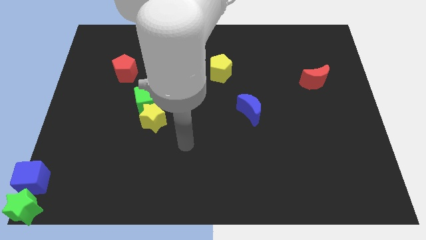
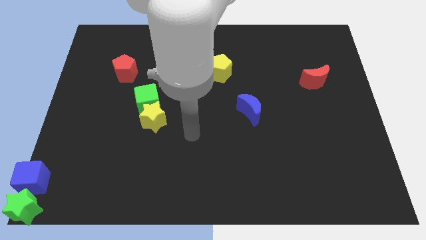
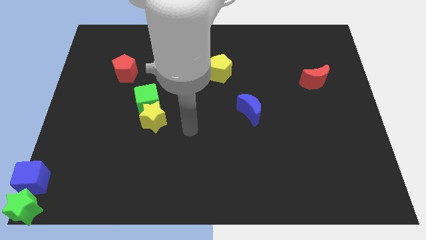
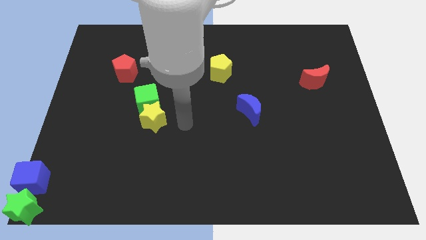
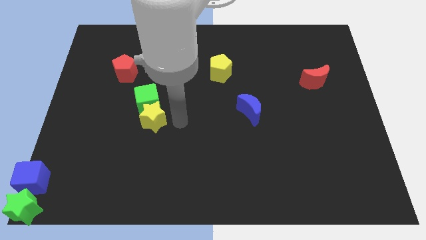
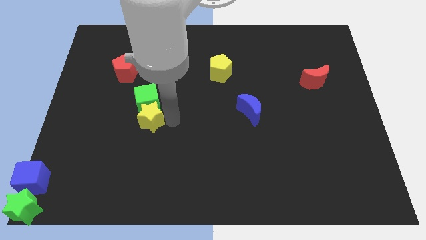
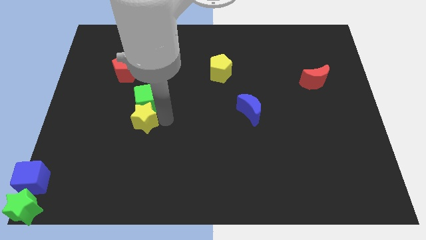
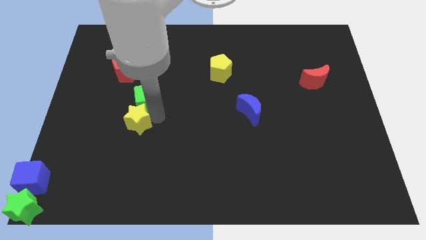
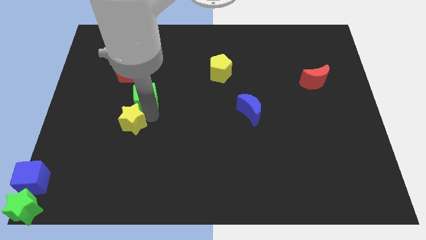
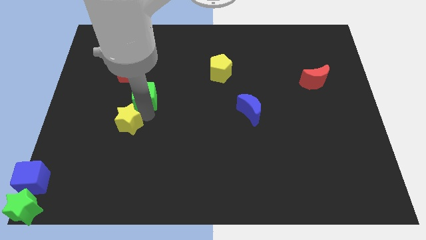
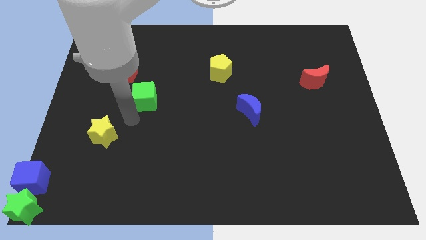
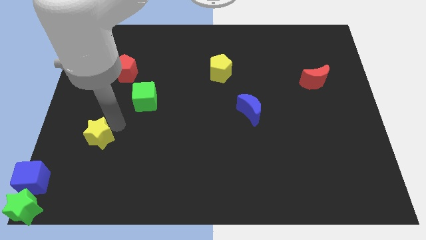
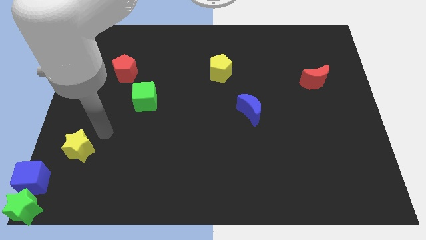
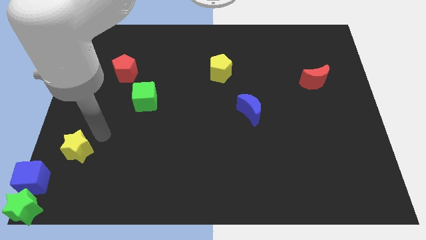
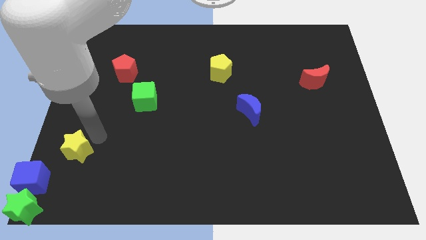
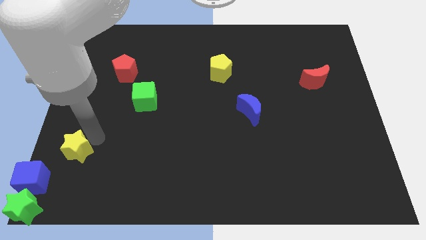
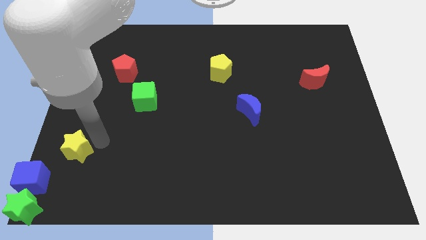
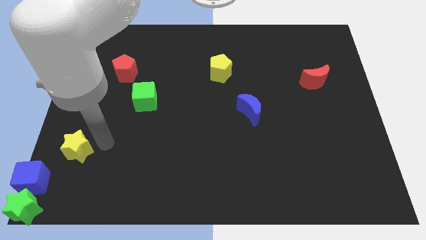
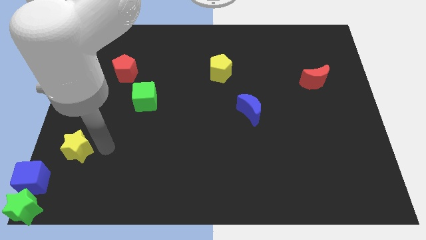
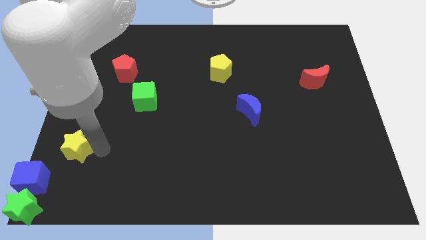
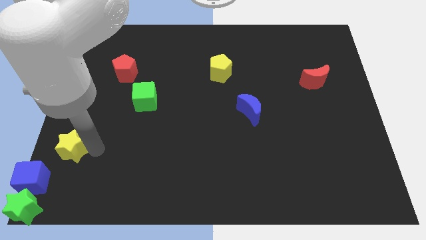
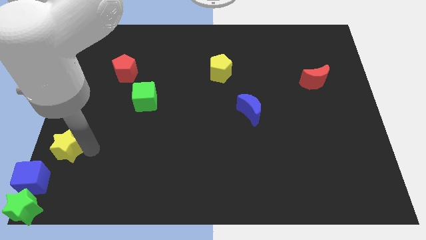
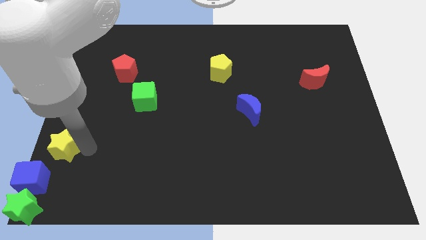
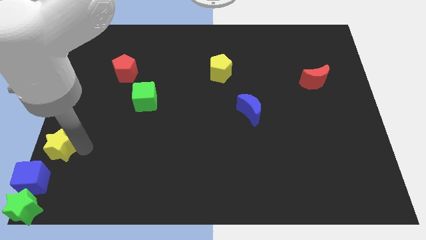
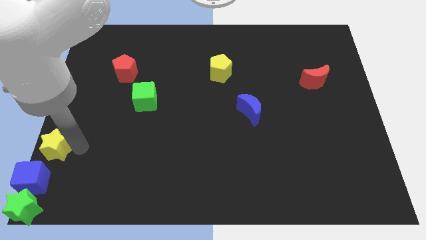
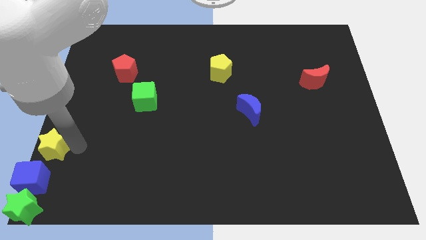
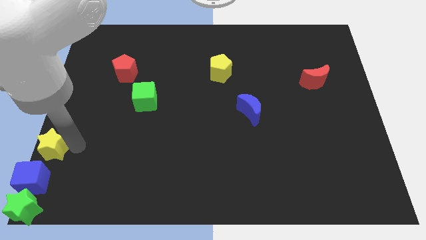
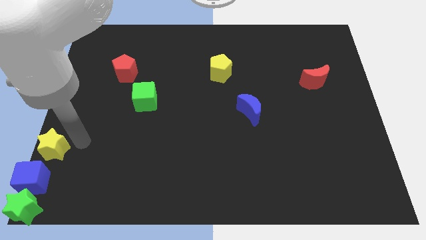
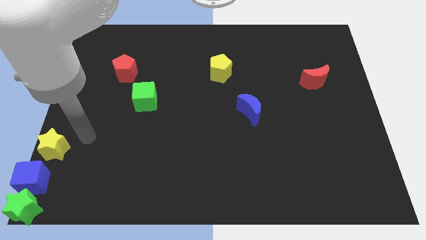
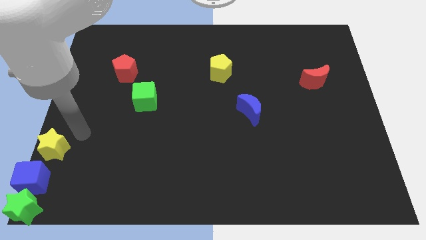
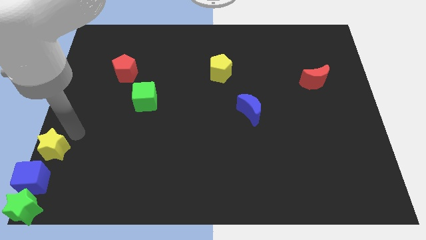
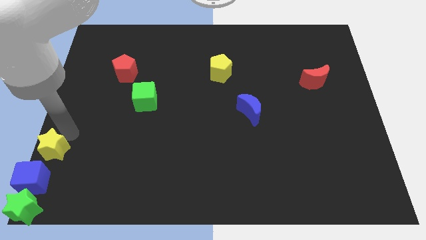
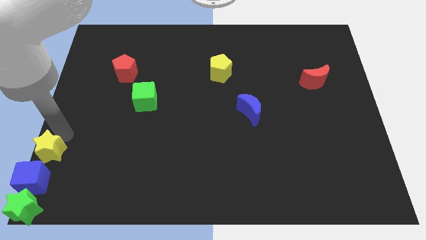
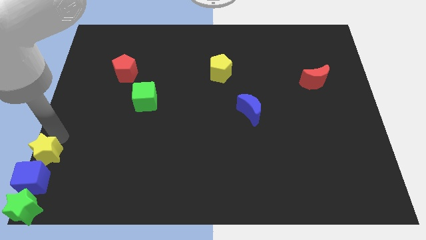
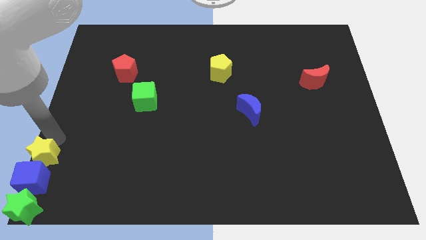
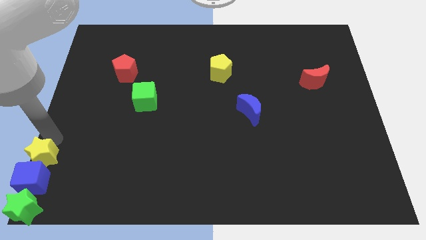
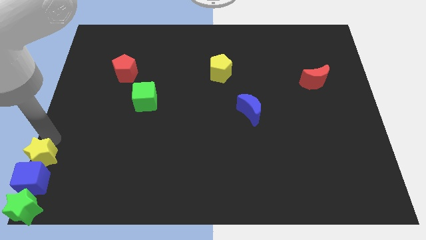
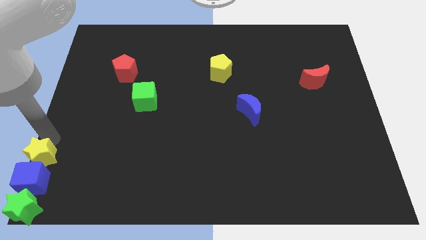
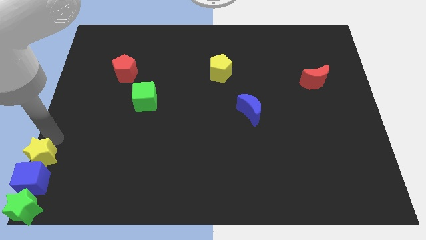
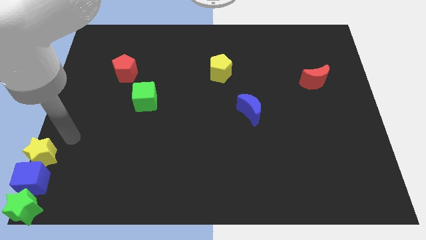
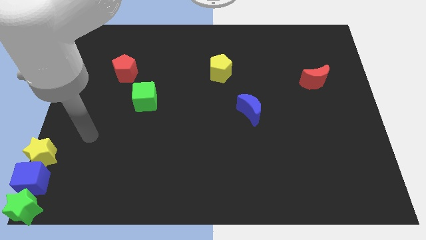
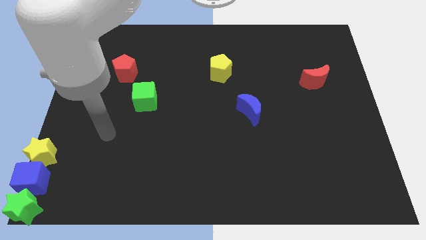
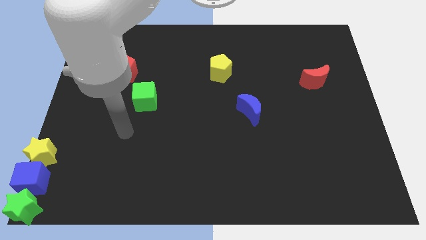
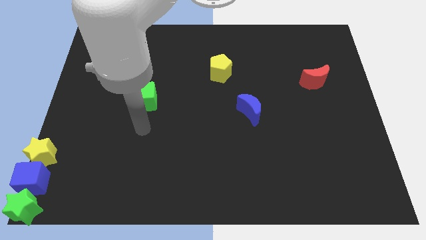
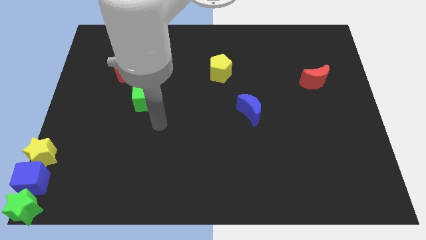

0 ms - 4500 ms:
push yellow star to left bottom of the board

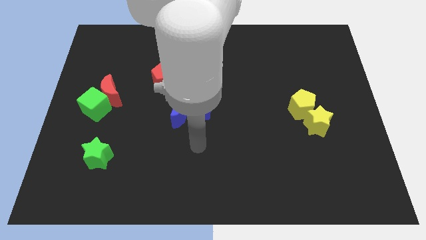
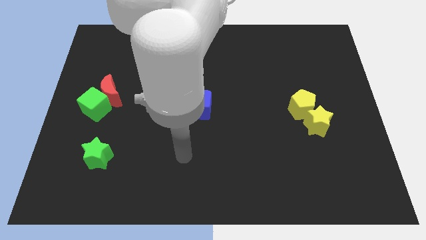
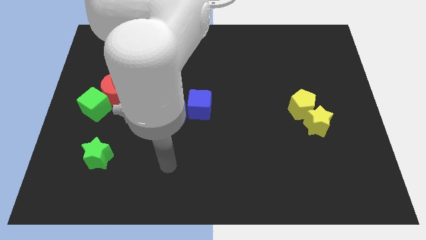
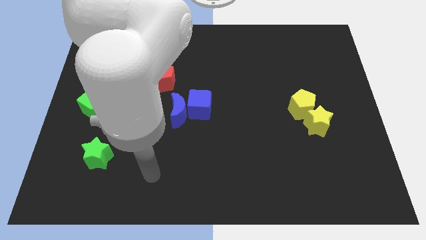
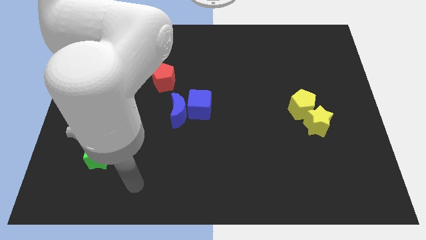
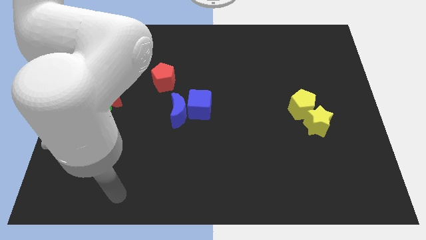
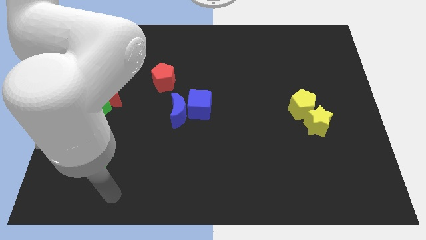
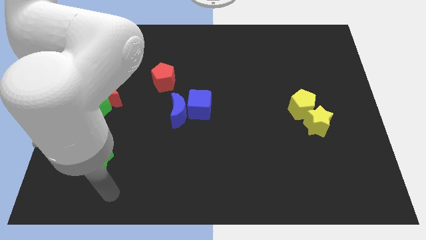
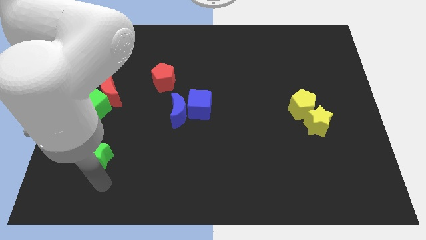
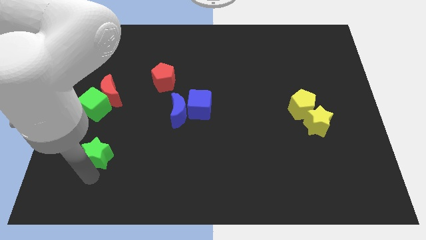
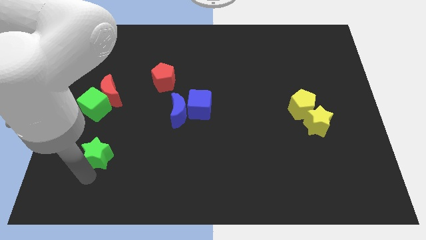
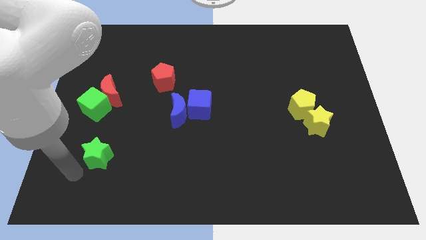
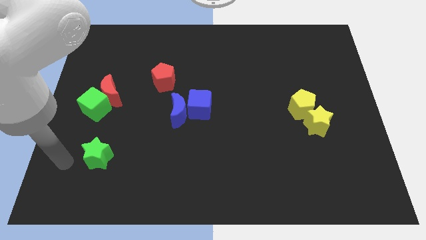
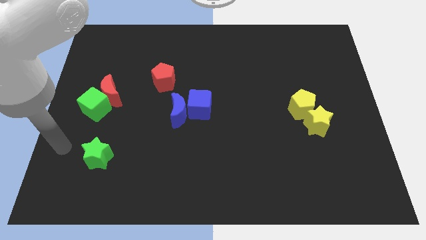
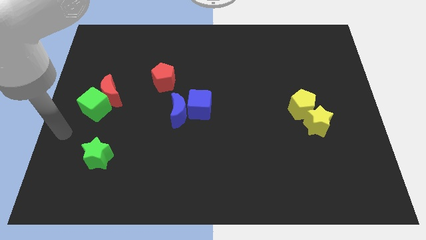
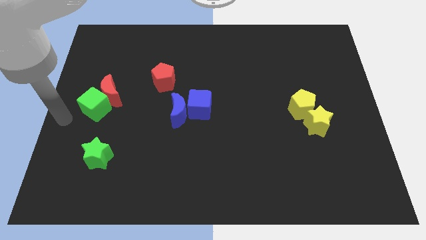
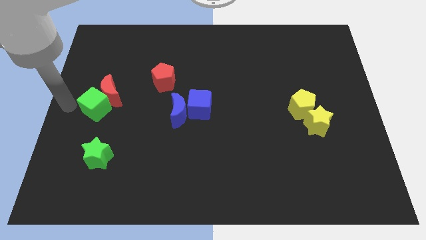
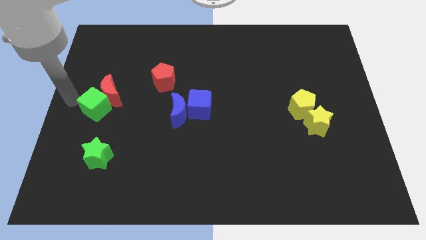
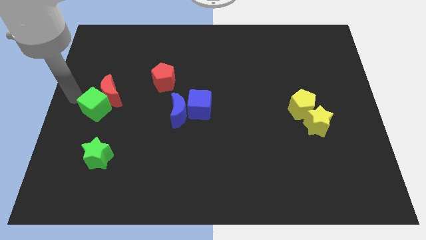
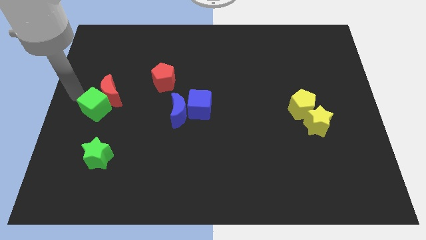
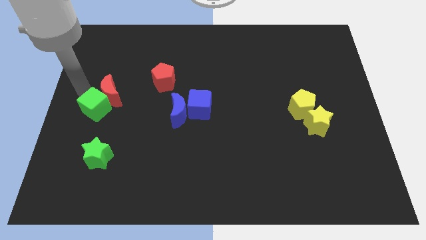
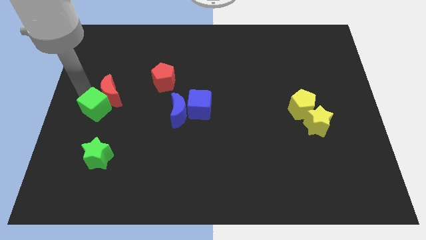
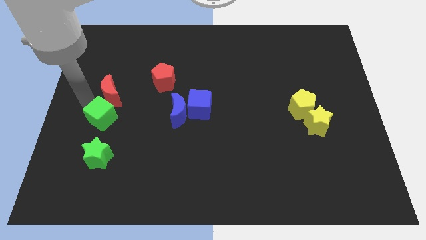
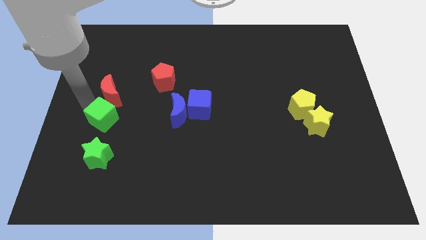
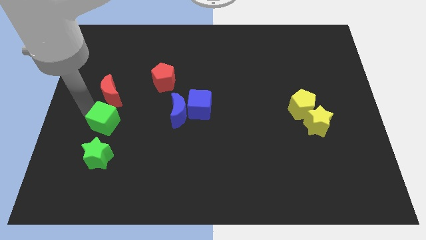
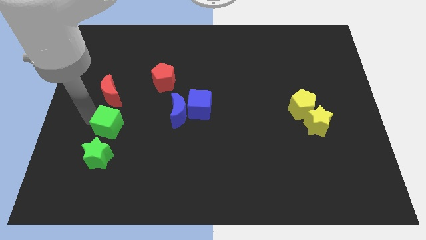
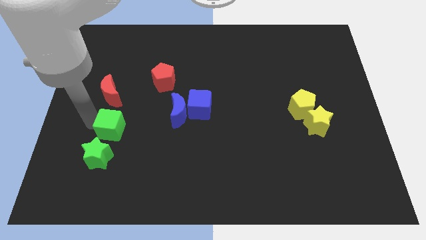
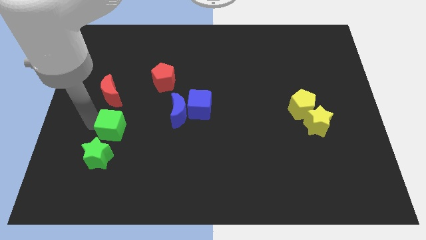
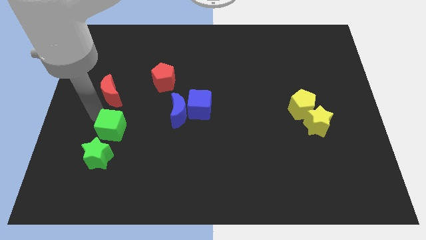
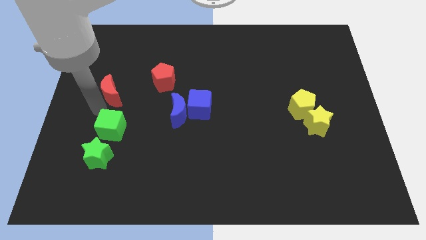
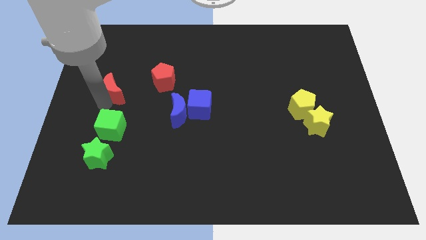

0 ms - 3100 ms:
separate green cube from the red the red crescent

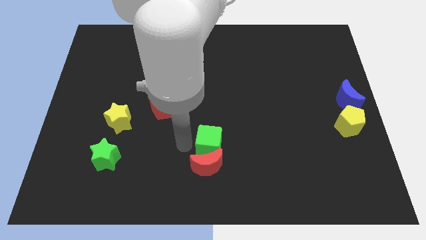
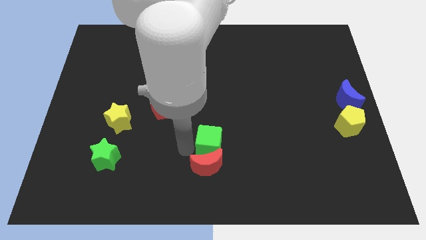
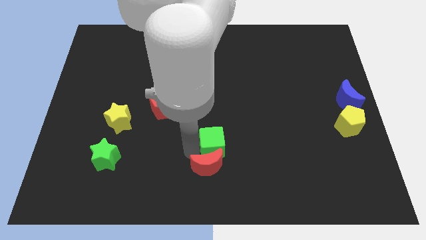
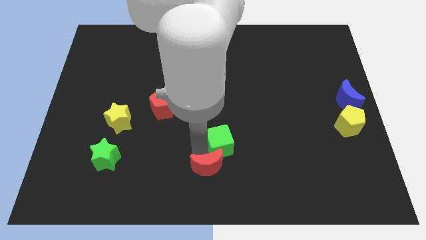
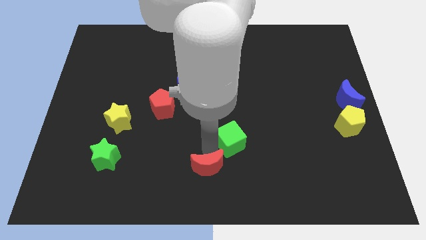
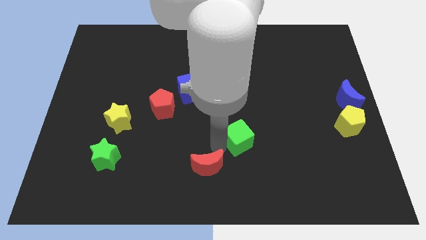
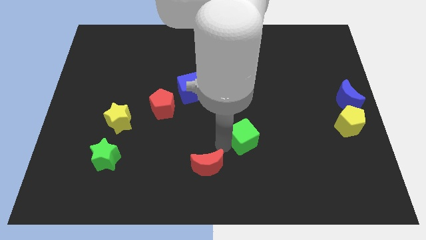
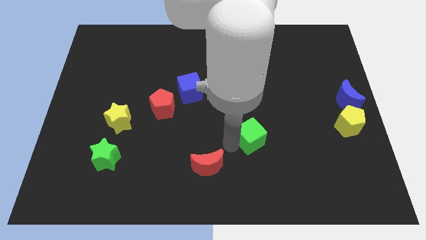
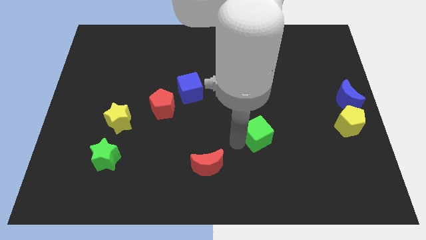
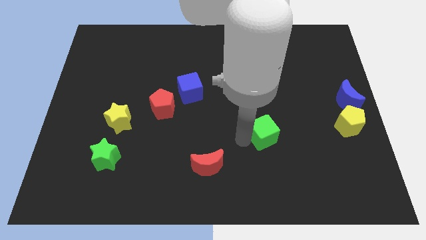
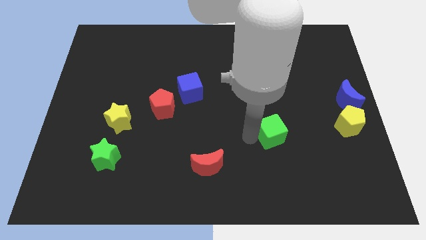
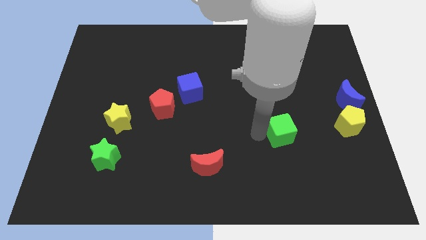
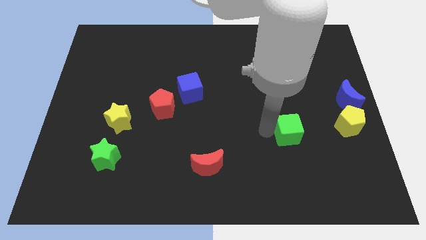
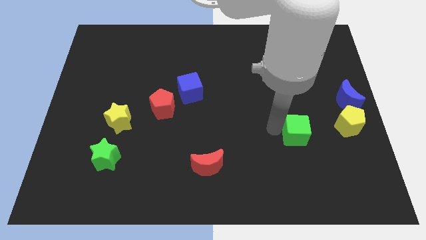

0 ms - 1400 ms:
separate the green cube from the red crescent
